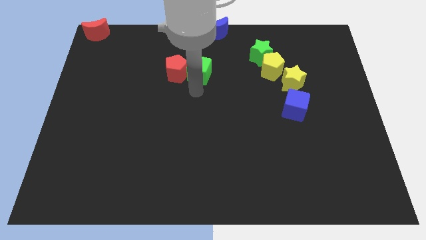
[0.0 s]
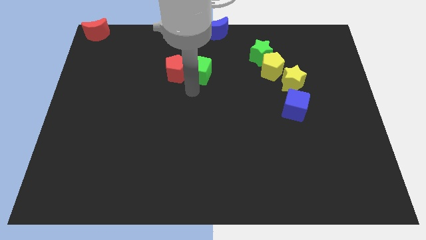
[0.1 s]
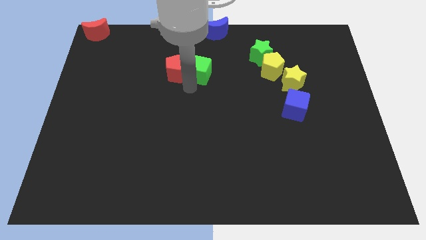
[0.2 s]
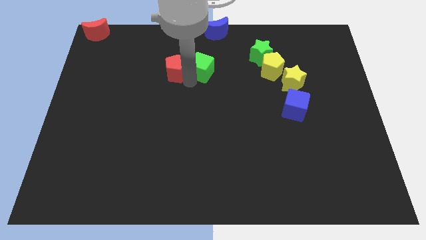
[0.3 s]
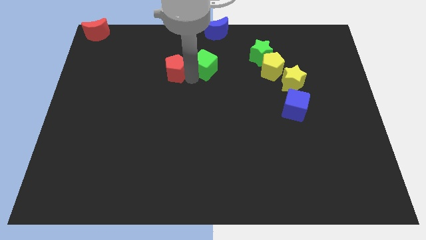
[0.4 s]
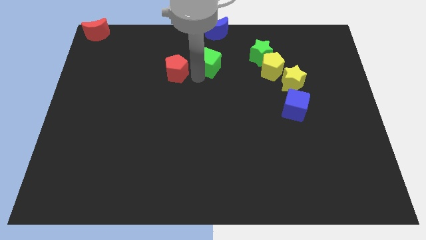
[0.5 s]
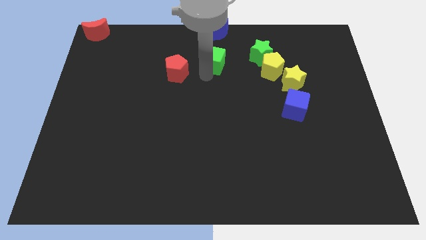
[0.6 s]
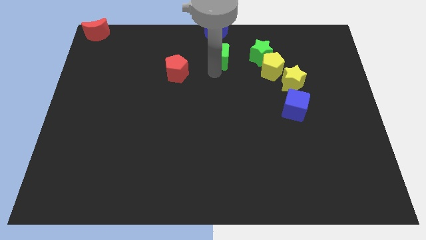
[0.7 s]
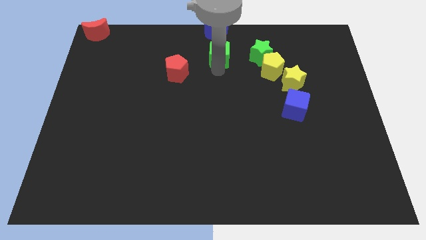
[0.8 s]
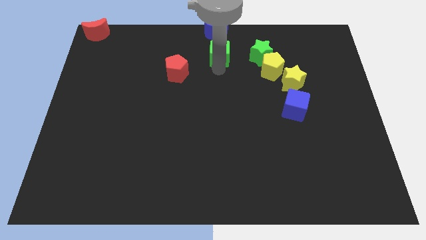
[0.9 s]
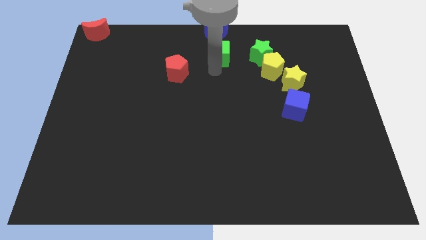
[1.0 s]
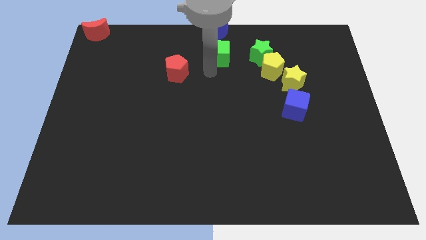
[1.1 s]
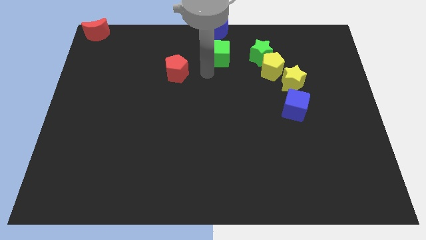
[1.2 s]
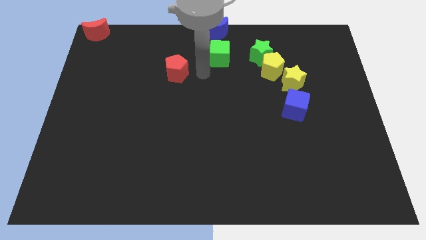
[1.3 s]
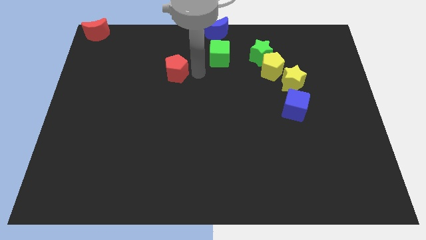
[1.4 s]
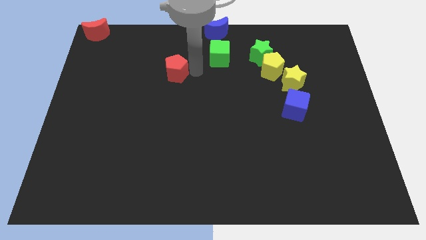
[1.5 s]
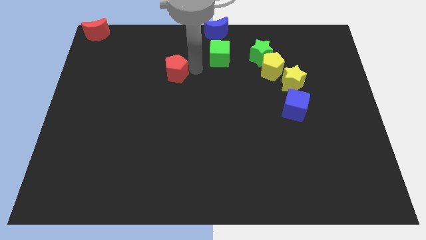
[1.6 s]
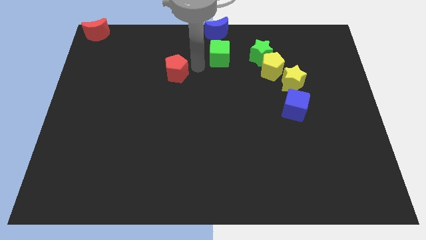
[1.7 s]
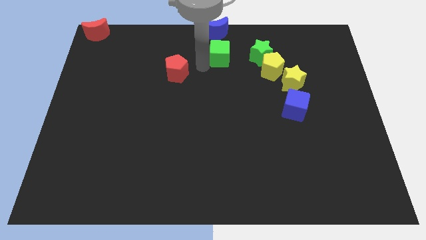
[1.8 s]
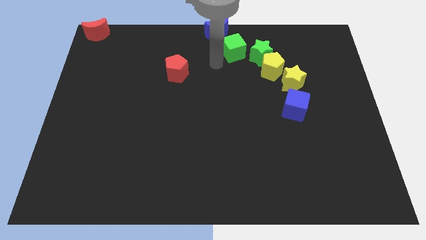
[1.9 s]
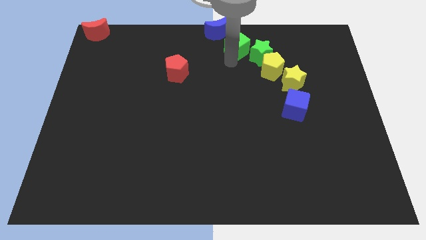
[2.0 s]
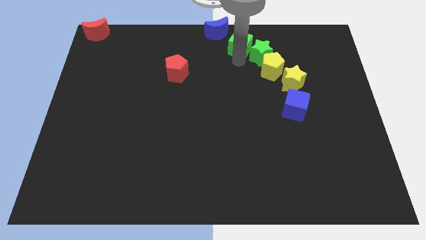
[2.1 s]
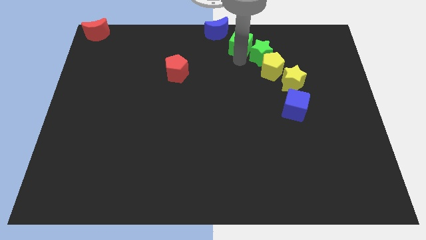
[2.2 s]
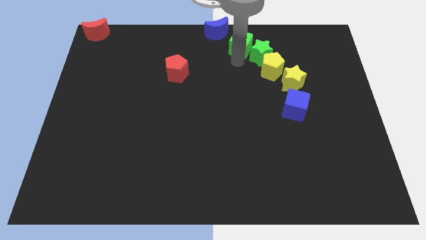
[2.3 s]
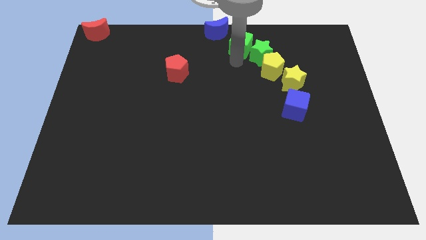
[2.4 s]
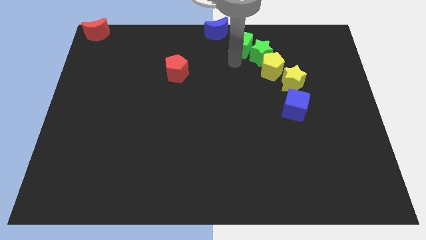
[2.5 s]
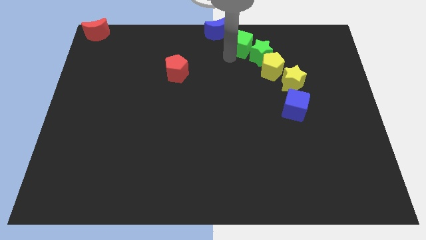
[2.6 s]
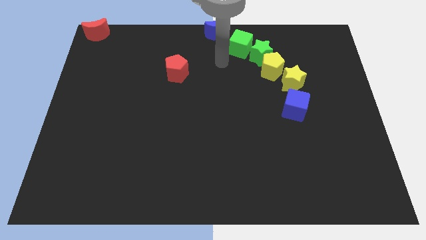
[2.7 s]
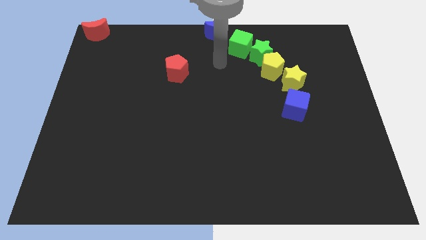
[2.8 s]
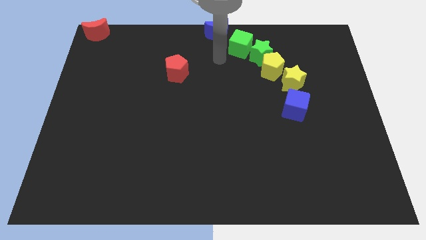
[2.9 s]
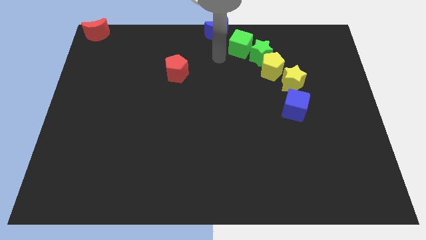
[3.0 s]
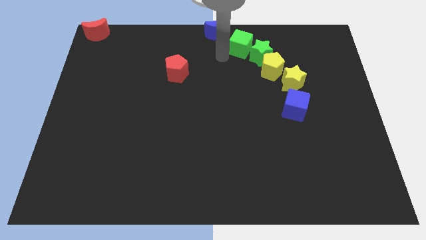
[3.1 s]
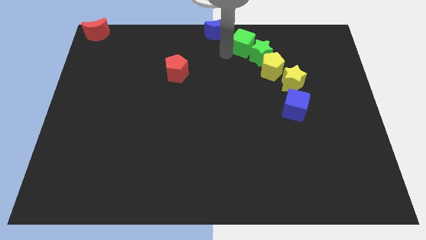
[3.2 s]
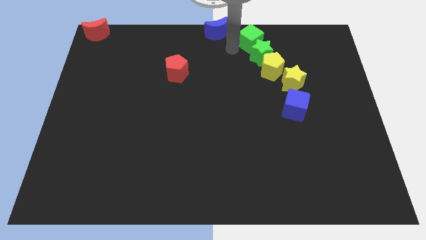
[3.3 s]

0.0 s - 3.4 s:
slide the green cube into the green star

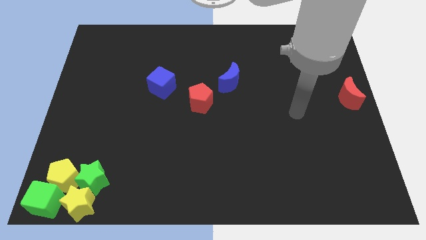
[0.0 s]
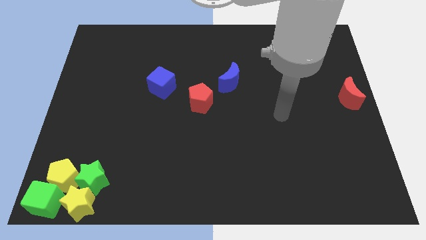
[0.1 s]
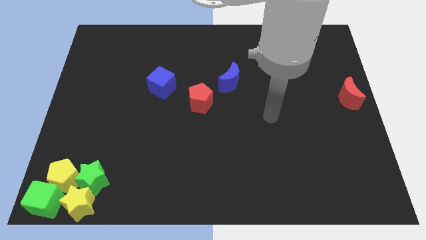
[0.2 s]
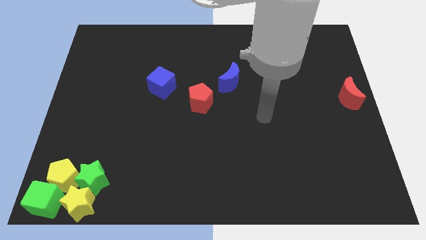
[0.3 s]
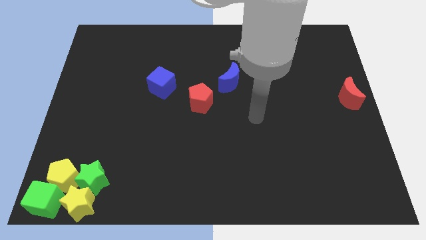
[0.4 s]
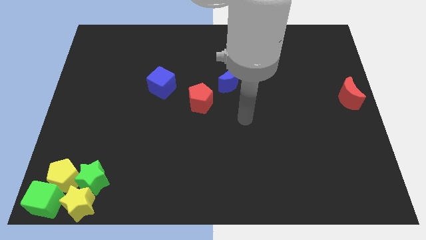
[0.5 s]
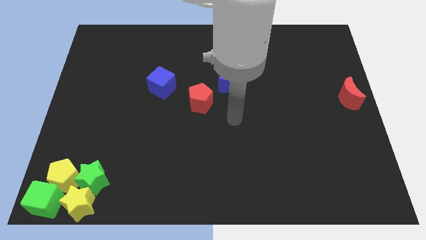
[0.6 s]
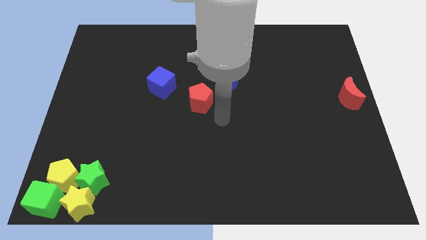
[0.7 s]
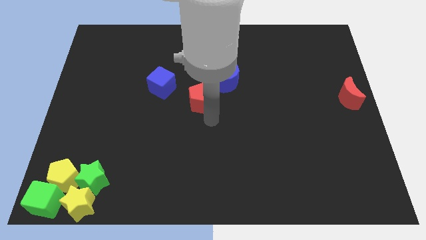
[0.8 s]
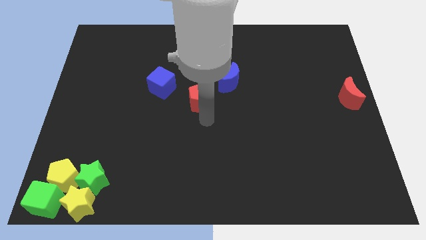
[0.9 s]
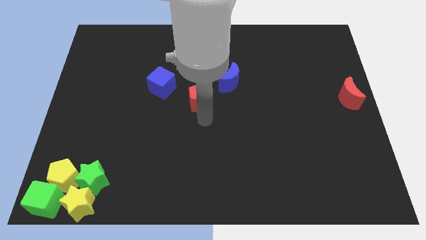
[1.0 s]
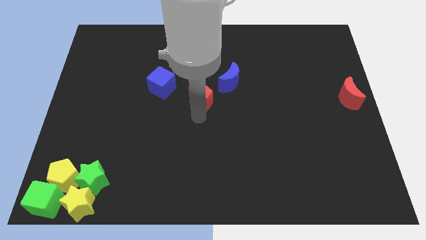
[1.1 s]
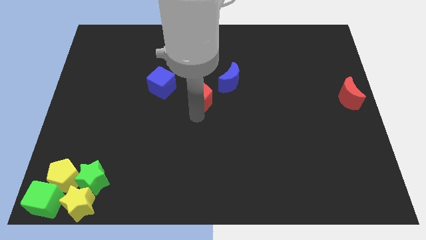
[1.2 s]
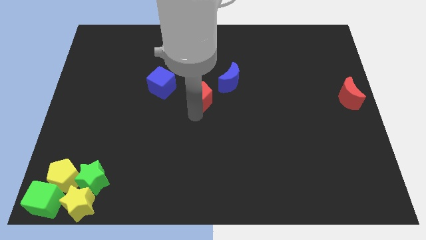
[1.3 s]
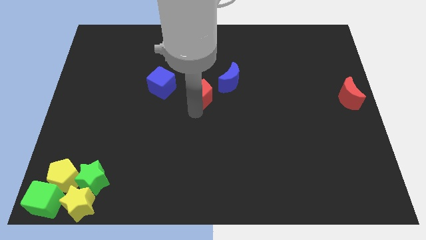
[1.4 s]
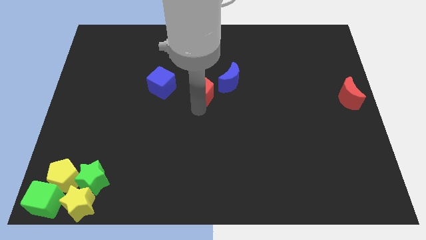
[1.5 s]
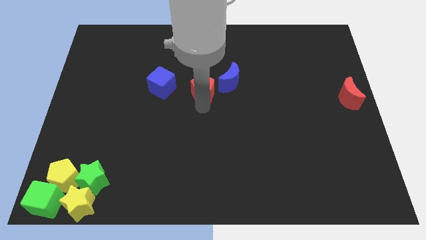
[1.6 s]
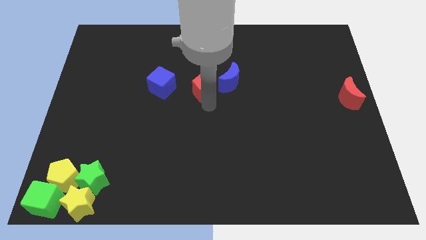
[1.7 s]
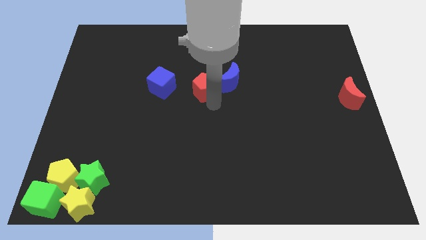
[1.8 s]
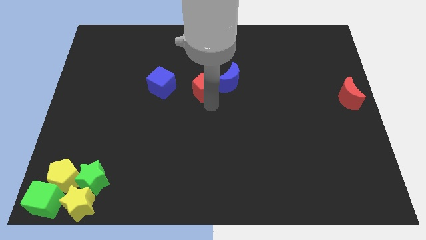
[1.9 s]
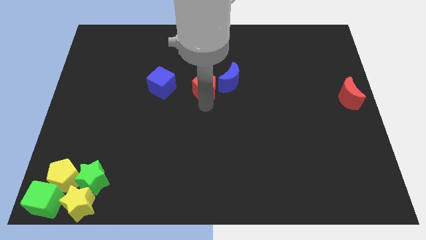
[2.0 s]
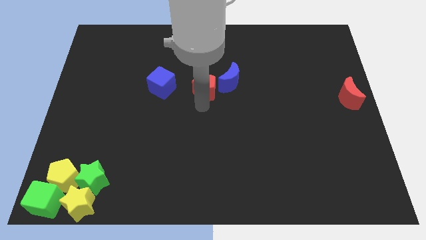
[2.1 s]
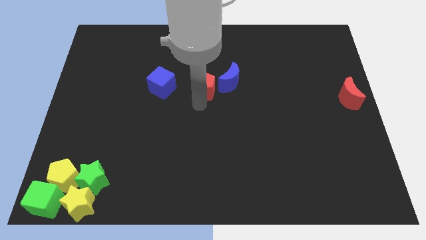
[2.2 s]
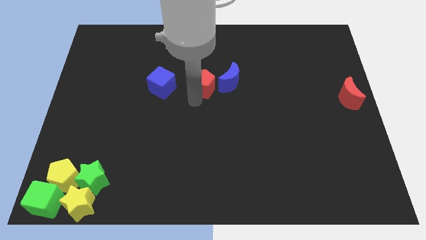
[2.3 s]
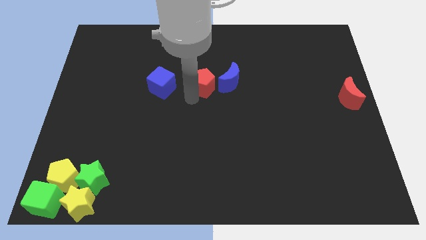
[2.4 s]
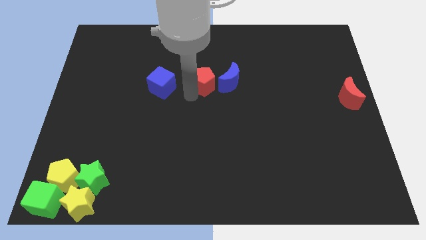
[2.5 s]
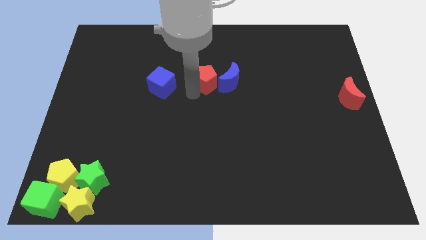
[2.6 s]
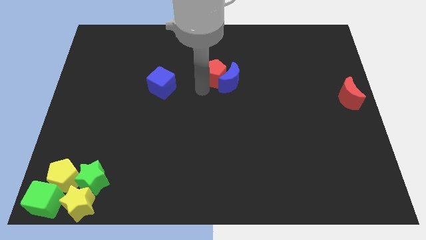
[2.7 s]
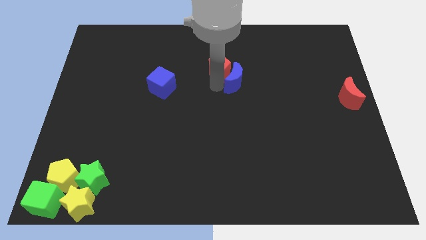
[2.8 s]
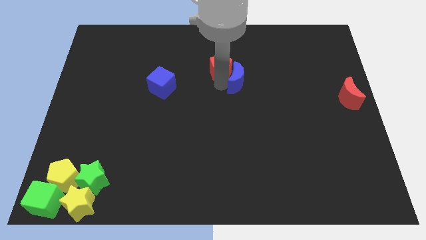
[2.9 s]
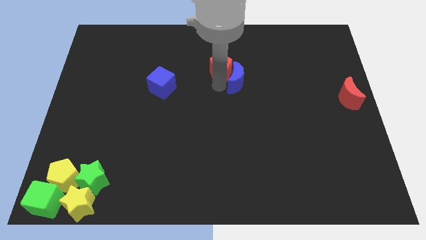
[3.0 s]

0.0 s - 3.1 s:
push red pentagon into blue moon

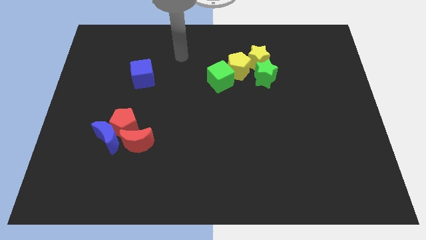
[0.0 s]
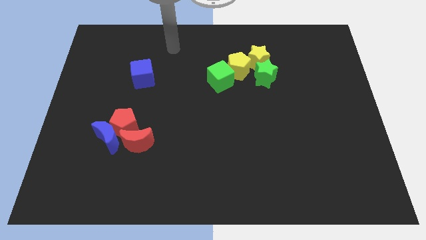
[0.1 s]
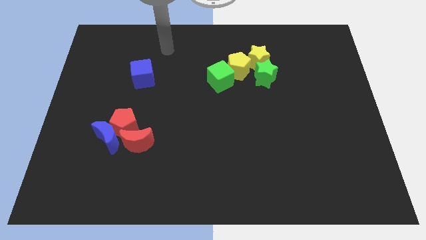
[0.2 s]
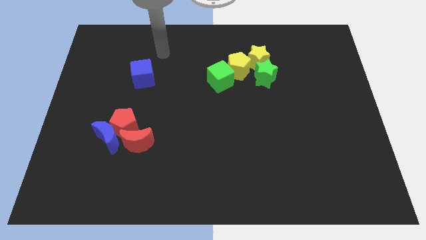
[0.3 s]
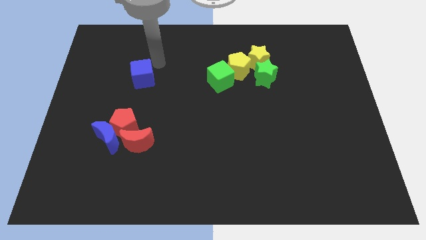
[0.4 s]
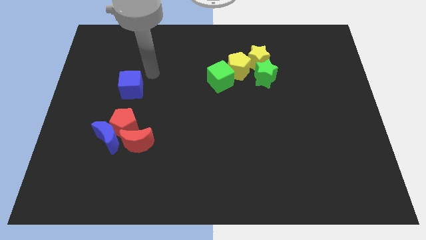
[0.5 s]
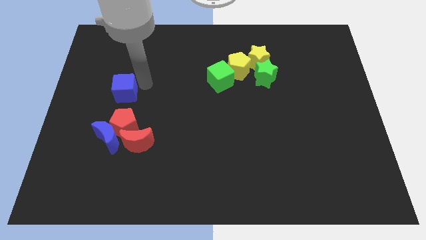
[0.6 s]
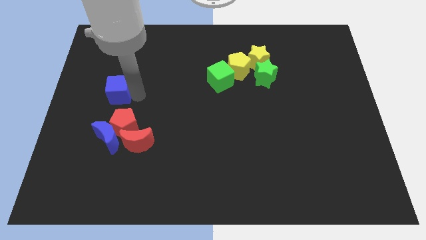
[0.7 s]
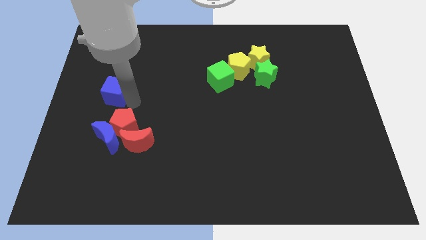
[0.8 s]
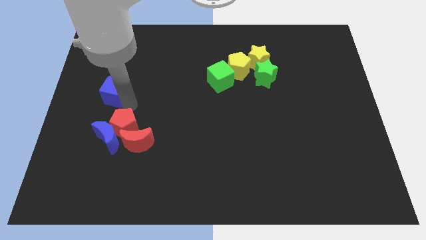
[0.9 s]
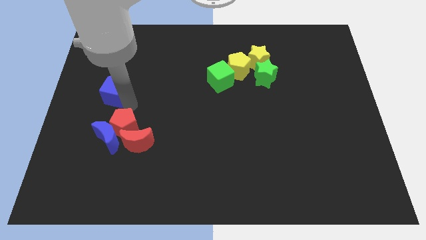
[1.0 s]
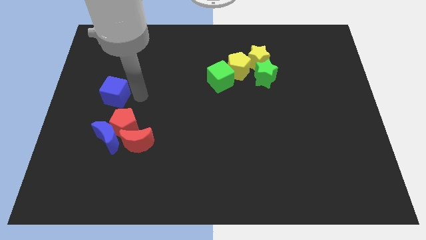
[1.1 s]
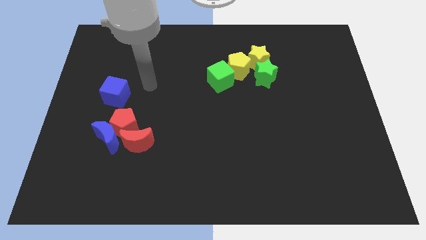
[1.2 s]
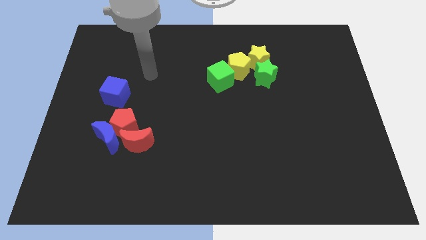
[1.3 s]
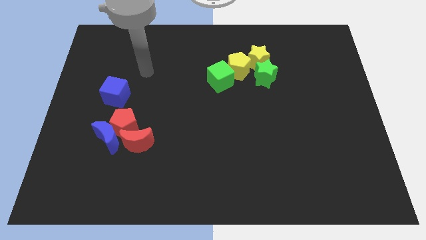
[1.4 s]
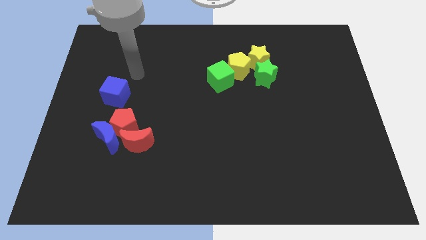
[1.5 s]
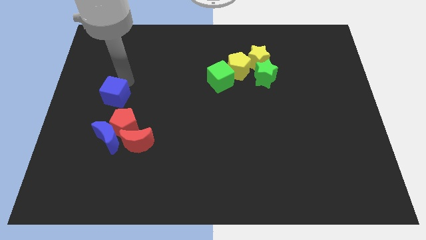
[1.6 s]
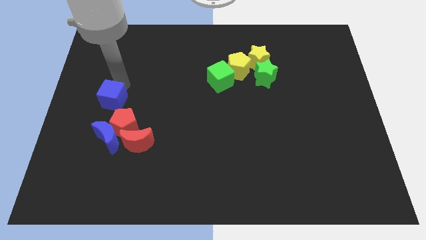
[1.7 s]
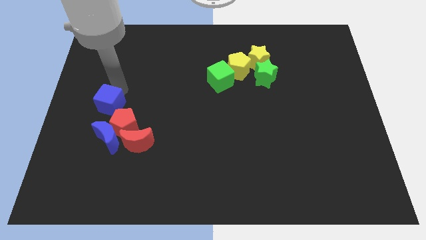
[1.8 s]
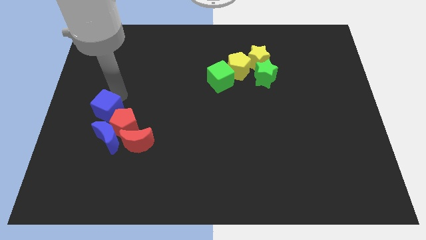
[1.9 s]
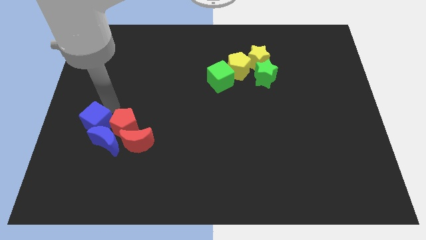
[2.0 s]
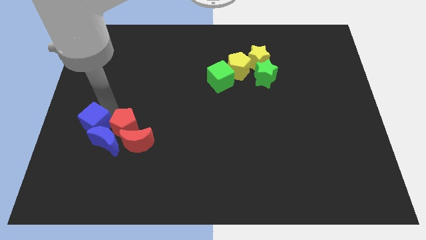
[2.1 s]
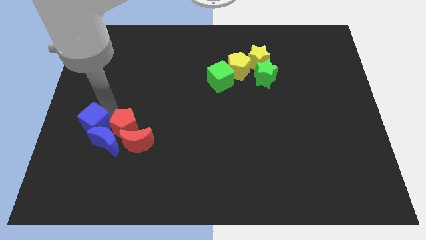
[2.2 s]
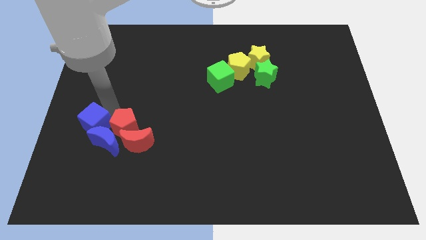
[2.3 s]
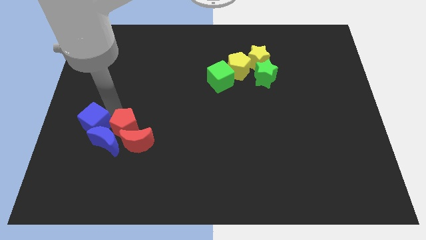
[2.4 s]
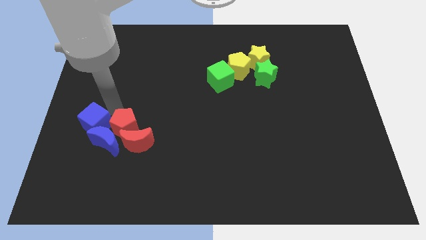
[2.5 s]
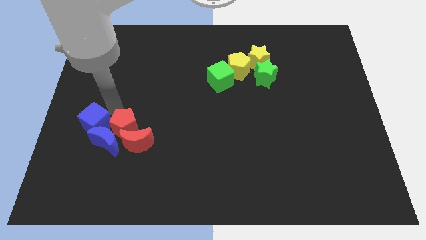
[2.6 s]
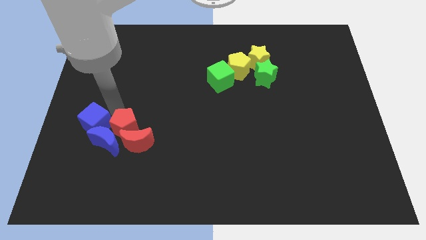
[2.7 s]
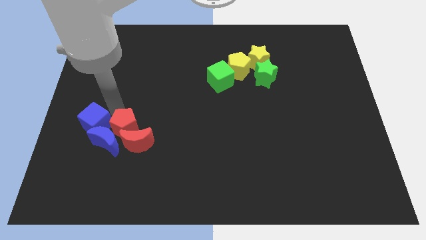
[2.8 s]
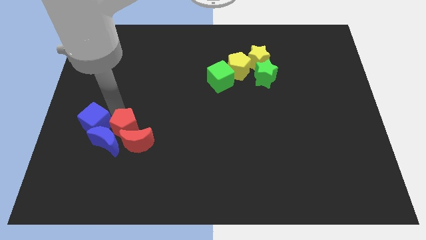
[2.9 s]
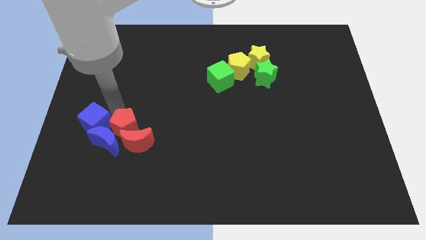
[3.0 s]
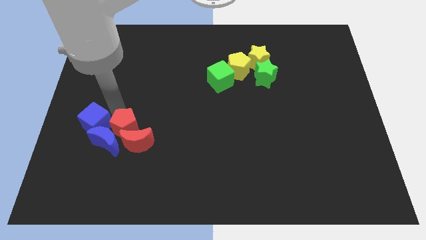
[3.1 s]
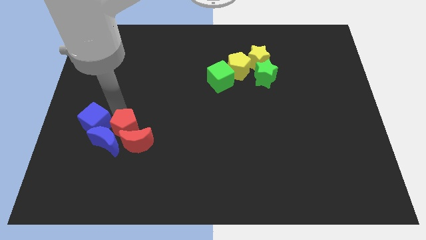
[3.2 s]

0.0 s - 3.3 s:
push the blue cube into the top side of the blue crescent
